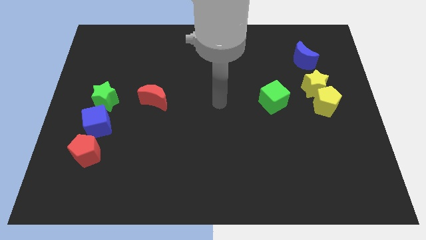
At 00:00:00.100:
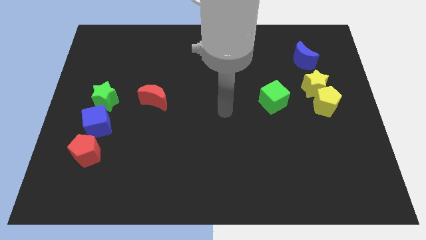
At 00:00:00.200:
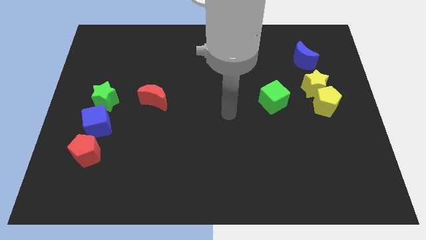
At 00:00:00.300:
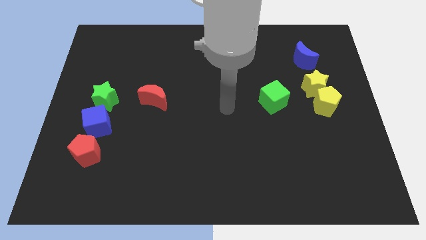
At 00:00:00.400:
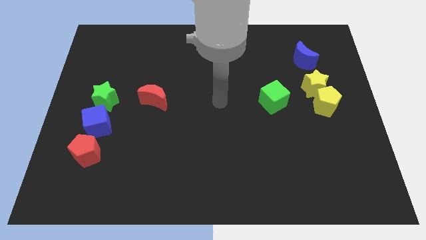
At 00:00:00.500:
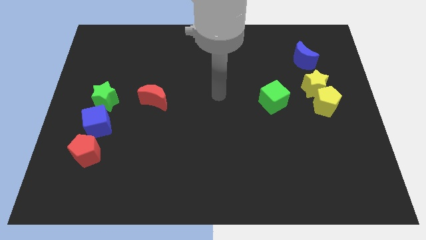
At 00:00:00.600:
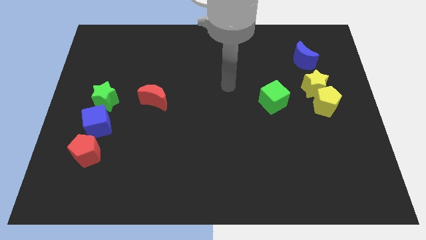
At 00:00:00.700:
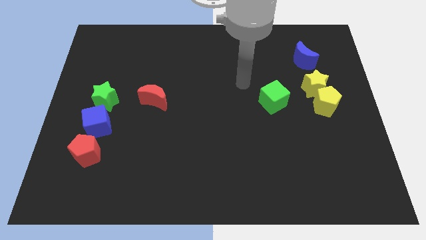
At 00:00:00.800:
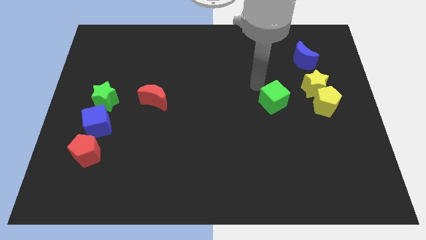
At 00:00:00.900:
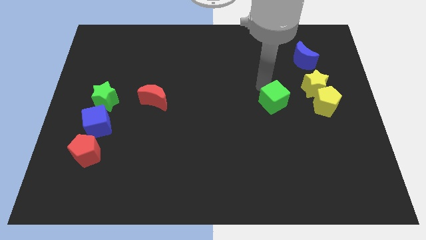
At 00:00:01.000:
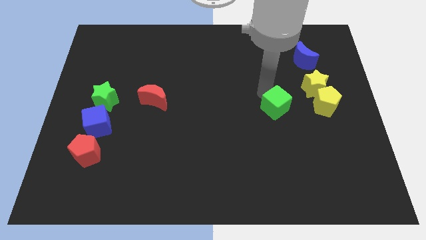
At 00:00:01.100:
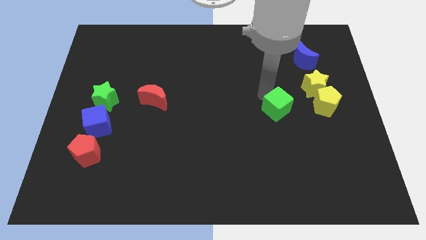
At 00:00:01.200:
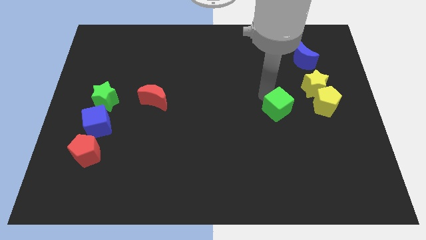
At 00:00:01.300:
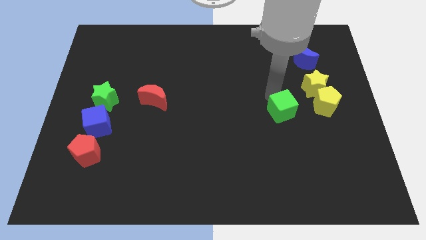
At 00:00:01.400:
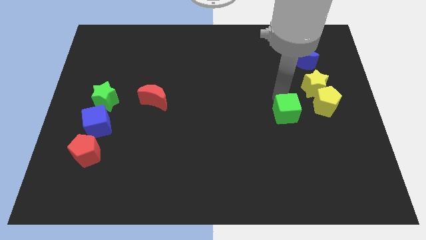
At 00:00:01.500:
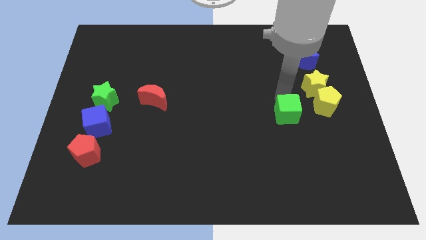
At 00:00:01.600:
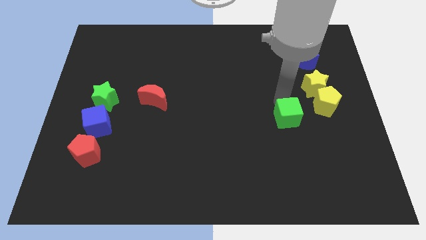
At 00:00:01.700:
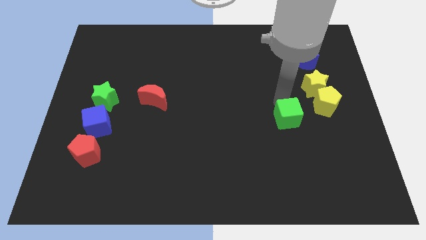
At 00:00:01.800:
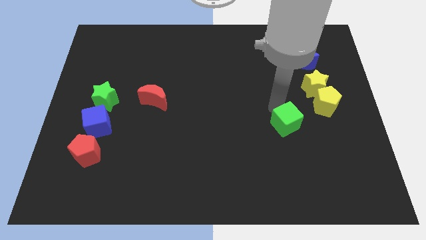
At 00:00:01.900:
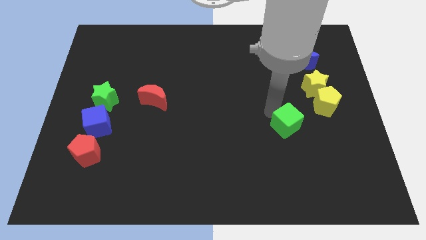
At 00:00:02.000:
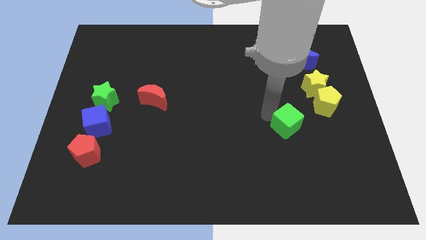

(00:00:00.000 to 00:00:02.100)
push green cube slightly down

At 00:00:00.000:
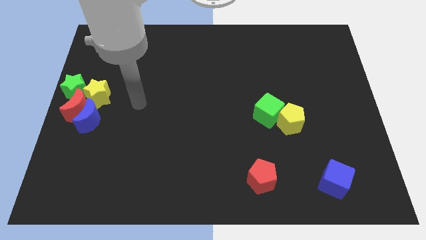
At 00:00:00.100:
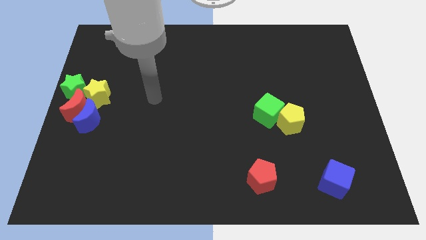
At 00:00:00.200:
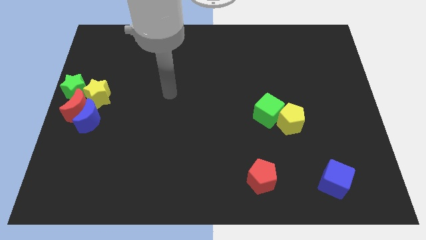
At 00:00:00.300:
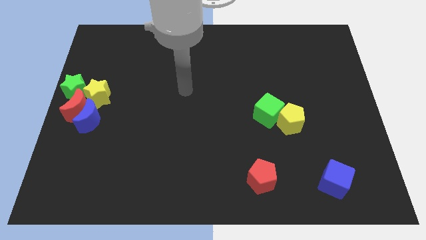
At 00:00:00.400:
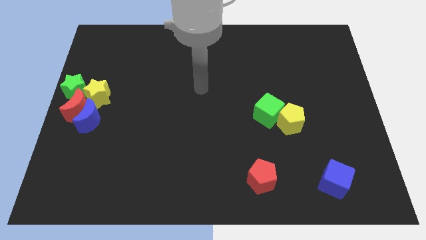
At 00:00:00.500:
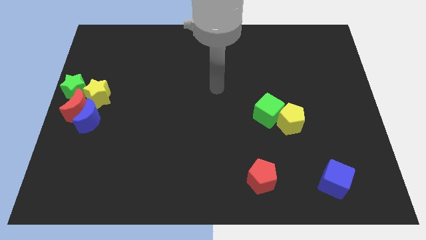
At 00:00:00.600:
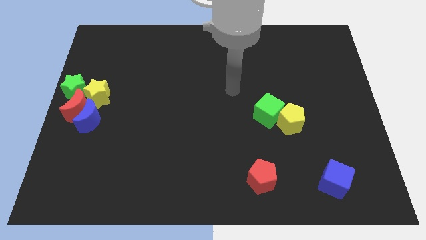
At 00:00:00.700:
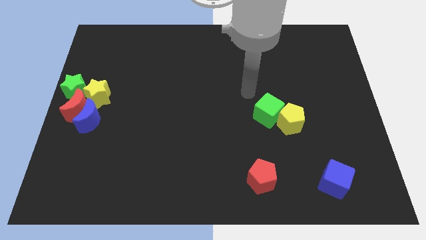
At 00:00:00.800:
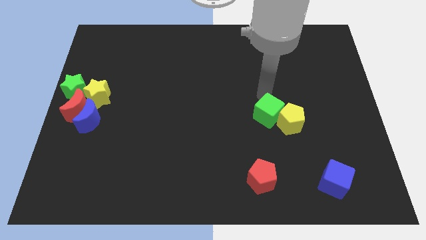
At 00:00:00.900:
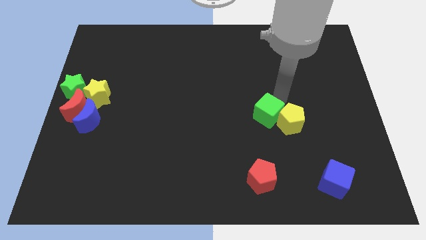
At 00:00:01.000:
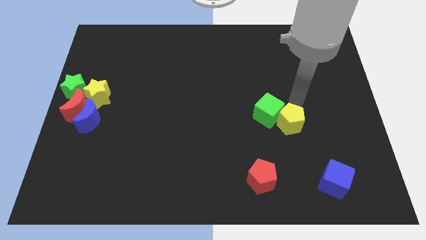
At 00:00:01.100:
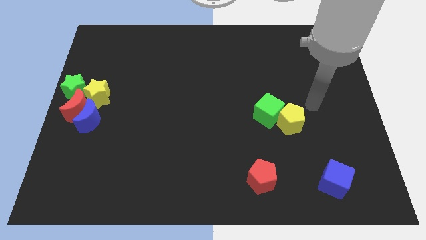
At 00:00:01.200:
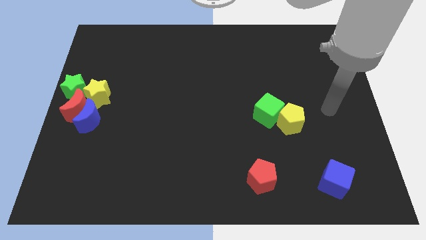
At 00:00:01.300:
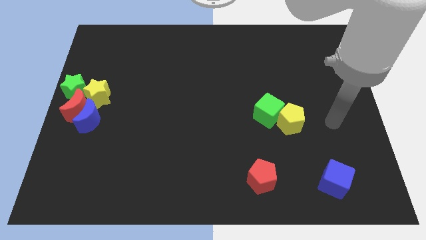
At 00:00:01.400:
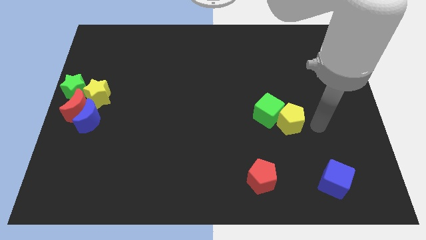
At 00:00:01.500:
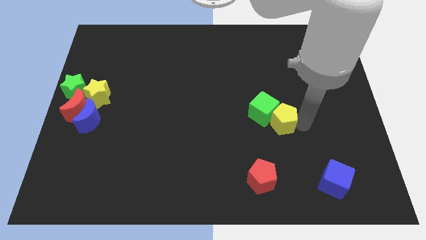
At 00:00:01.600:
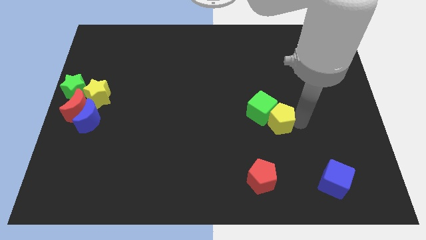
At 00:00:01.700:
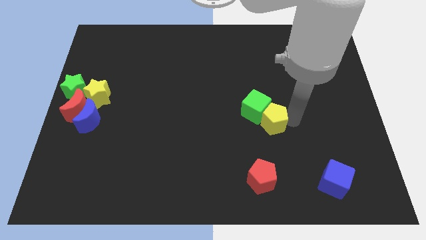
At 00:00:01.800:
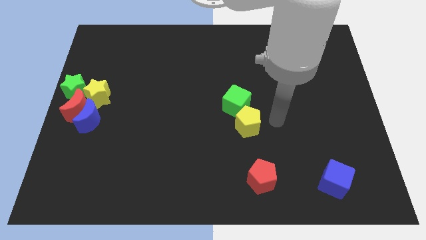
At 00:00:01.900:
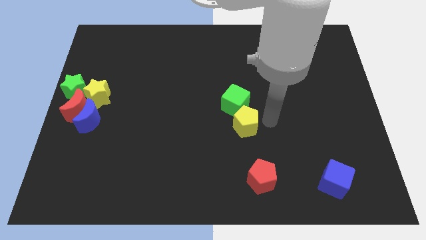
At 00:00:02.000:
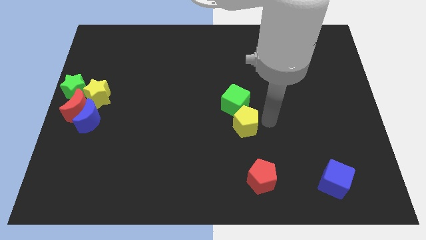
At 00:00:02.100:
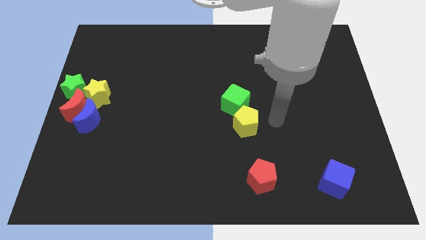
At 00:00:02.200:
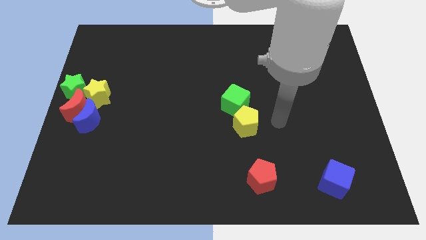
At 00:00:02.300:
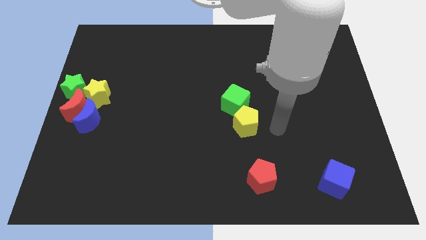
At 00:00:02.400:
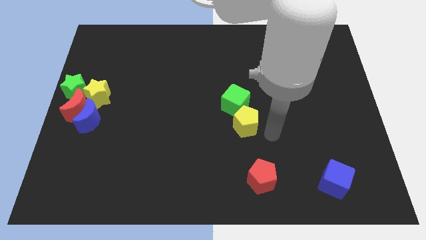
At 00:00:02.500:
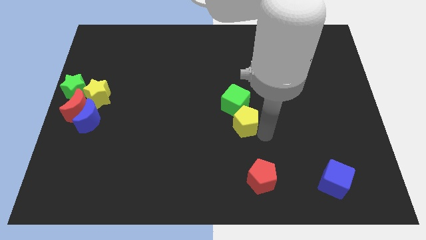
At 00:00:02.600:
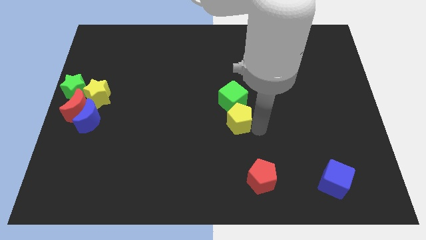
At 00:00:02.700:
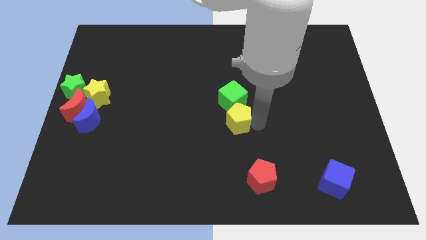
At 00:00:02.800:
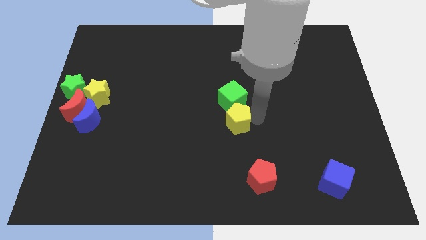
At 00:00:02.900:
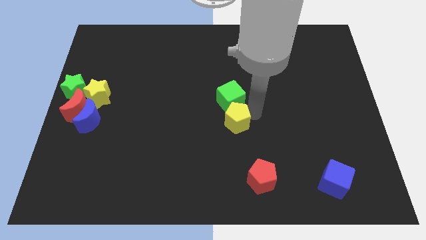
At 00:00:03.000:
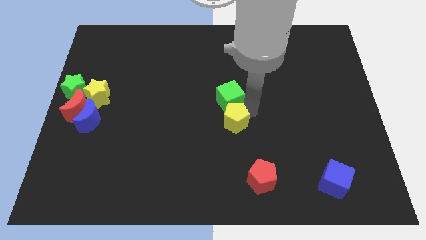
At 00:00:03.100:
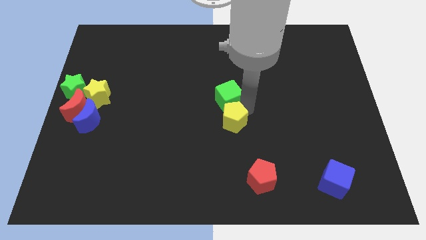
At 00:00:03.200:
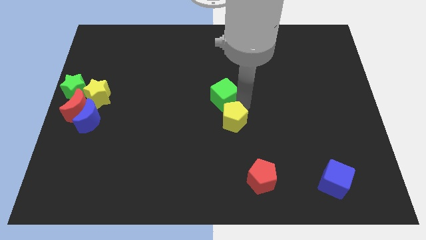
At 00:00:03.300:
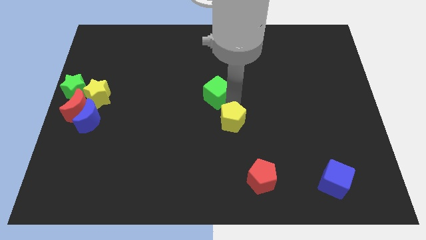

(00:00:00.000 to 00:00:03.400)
move yellow pentagon and green cube in the center

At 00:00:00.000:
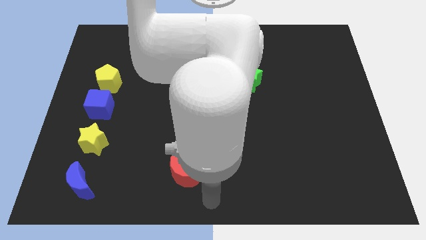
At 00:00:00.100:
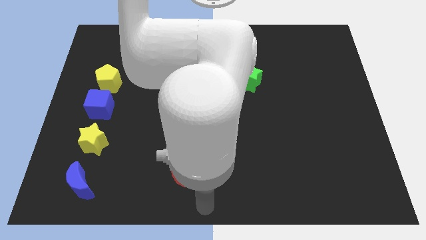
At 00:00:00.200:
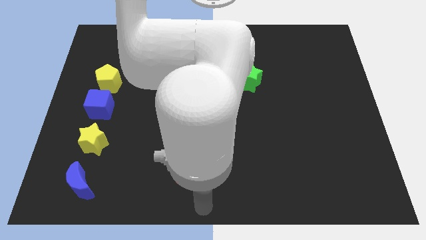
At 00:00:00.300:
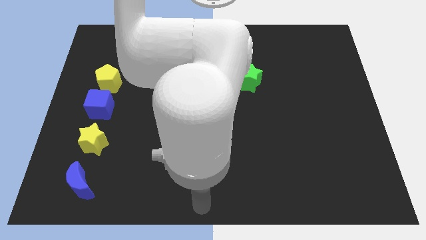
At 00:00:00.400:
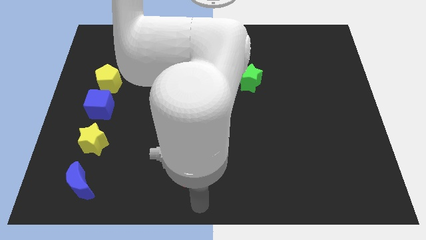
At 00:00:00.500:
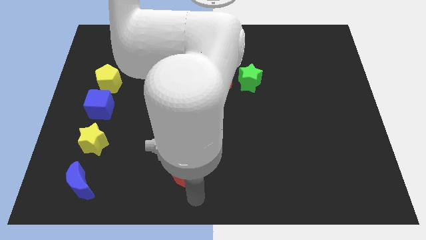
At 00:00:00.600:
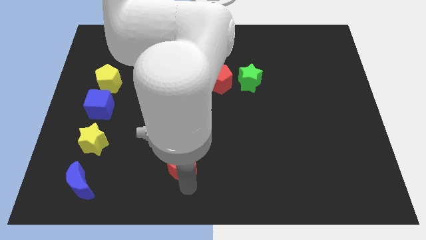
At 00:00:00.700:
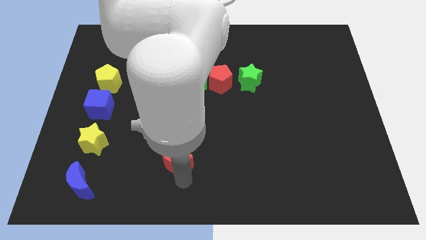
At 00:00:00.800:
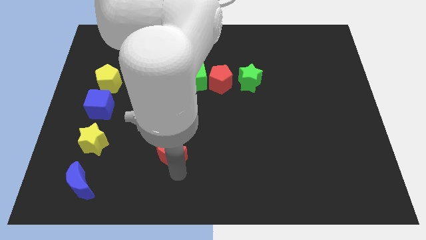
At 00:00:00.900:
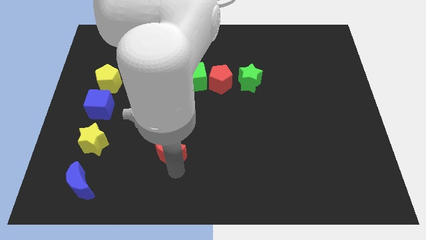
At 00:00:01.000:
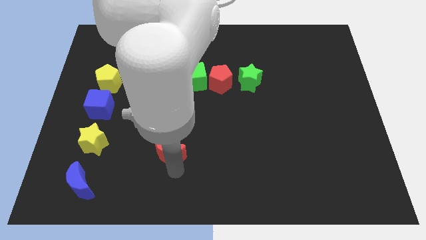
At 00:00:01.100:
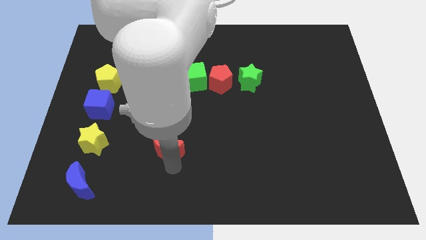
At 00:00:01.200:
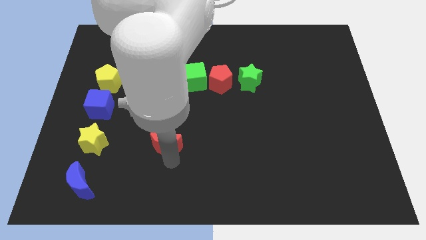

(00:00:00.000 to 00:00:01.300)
put the red moon parallel to the yellow star

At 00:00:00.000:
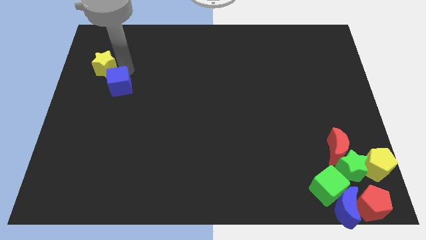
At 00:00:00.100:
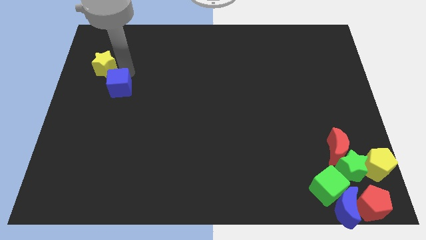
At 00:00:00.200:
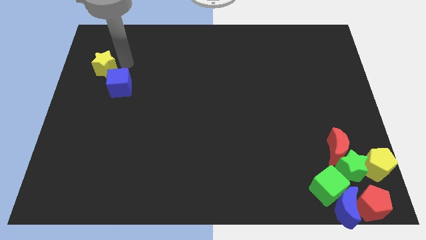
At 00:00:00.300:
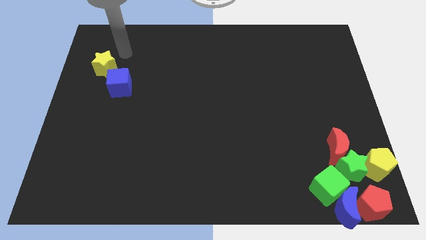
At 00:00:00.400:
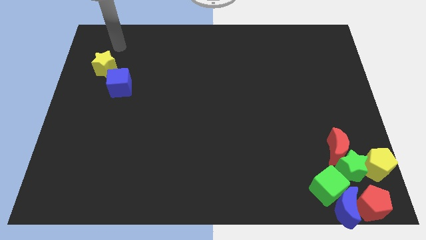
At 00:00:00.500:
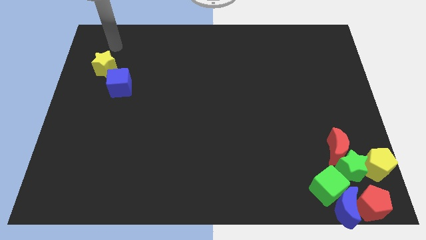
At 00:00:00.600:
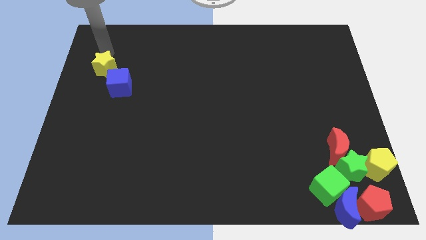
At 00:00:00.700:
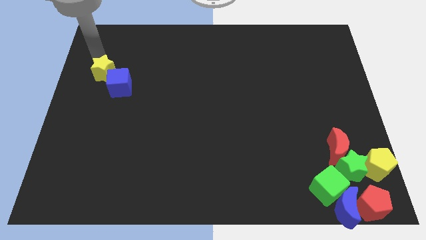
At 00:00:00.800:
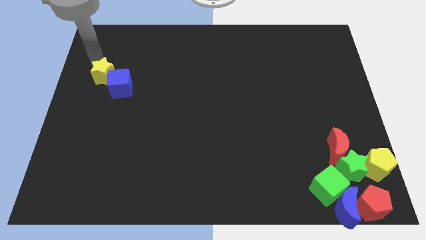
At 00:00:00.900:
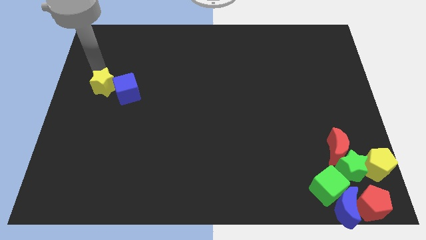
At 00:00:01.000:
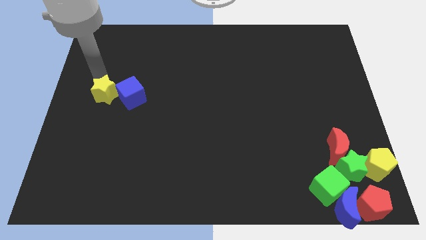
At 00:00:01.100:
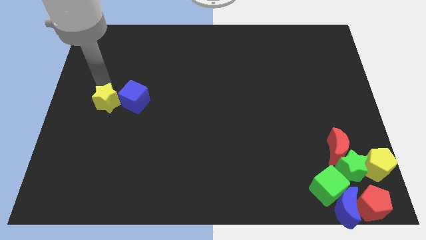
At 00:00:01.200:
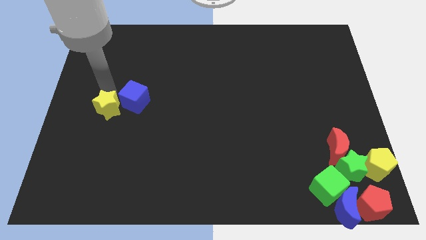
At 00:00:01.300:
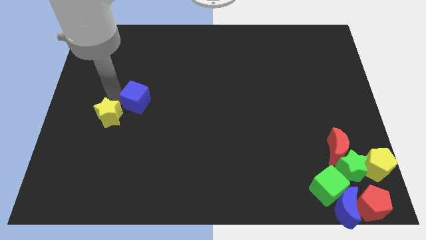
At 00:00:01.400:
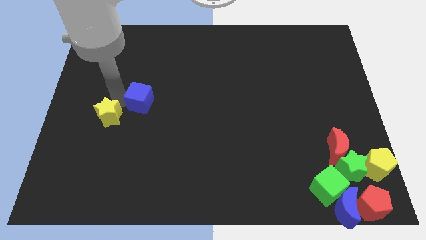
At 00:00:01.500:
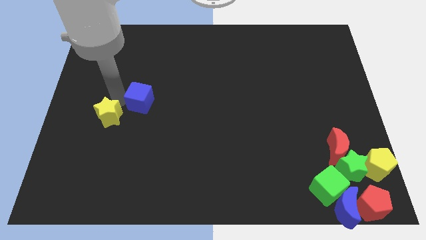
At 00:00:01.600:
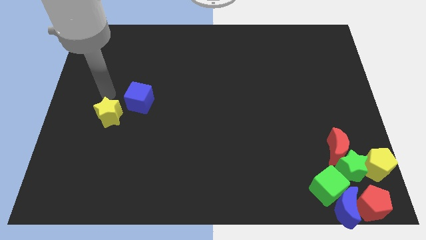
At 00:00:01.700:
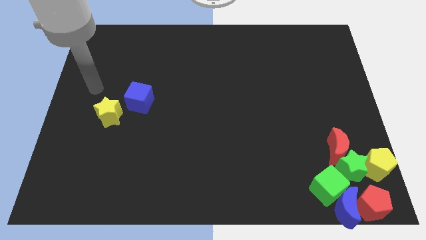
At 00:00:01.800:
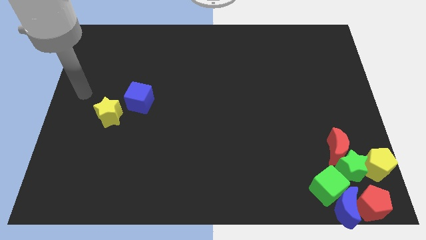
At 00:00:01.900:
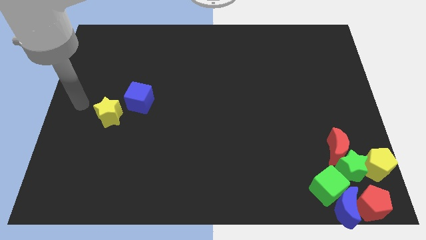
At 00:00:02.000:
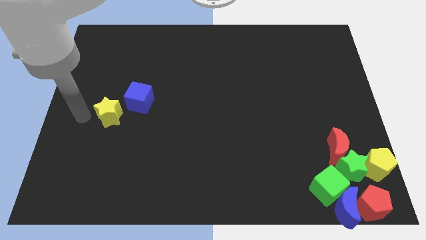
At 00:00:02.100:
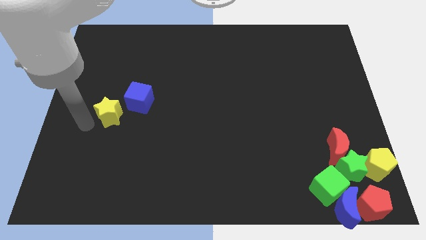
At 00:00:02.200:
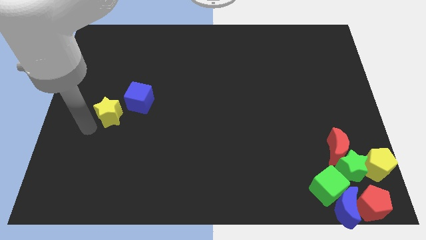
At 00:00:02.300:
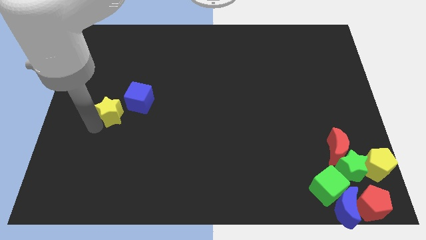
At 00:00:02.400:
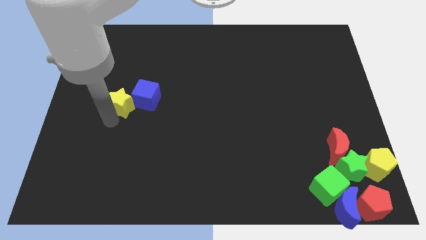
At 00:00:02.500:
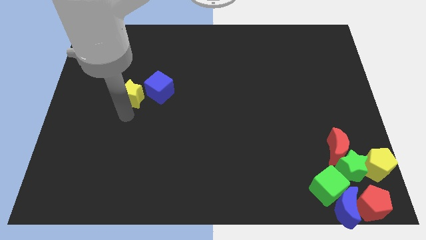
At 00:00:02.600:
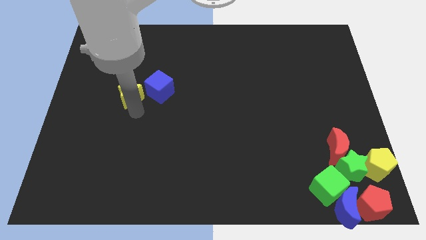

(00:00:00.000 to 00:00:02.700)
push the yellow star to the left of the blue cube
